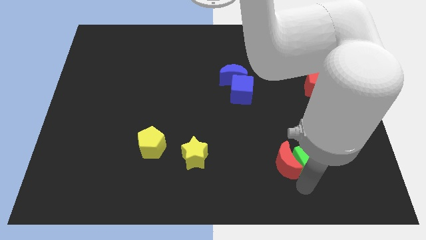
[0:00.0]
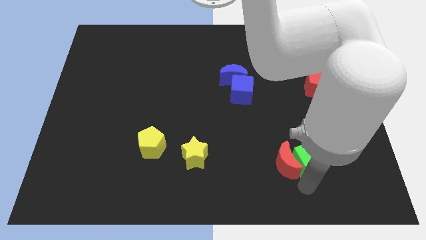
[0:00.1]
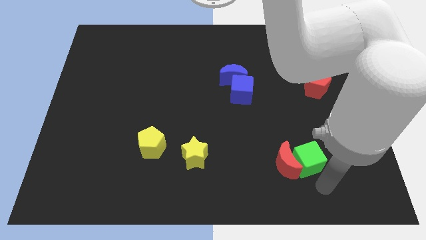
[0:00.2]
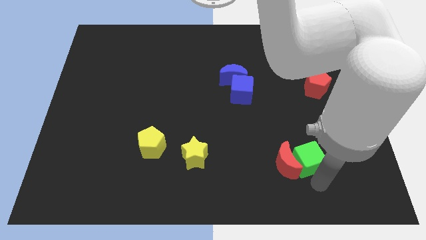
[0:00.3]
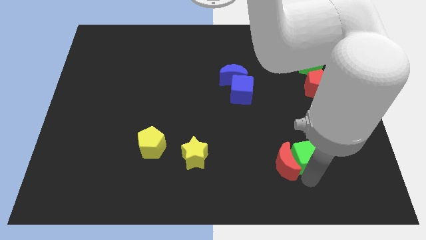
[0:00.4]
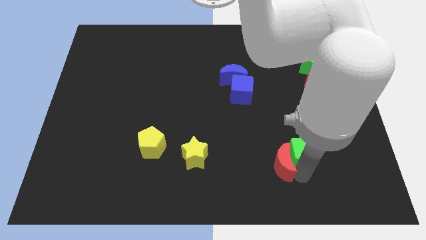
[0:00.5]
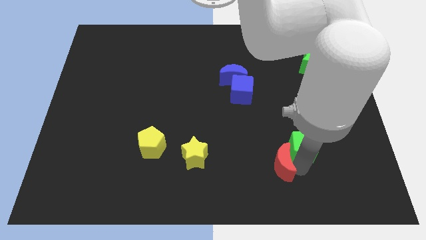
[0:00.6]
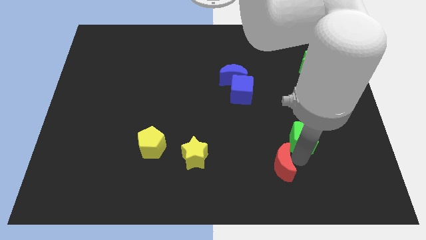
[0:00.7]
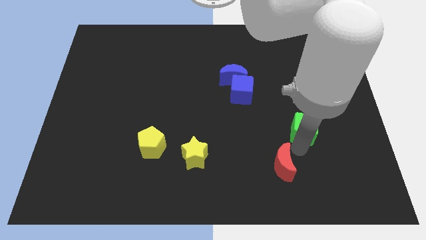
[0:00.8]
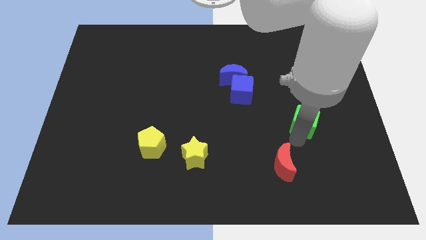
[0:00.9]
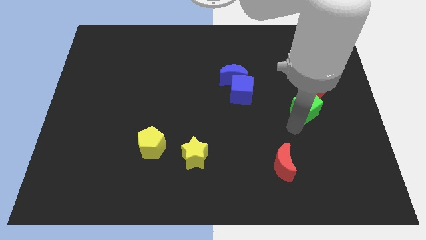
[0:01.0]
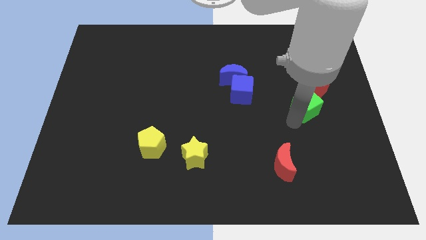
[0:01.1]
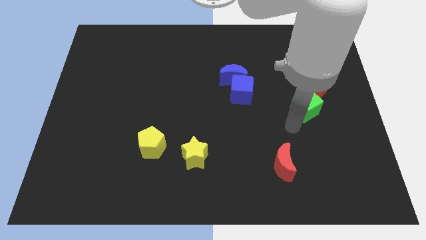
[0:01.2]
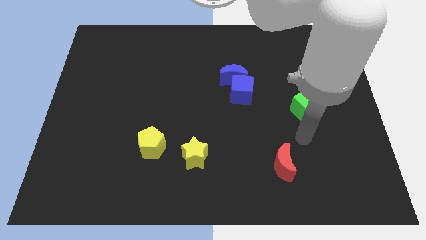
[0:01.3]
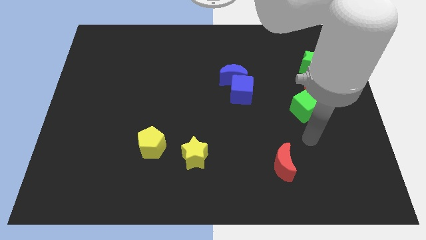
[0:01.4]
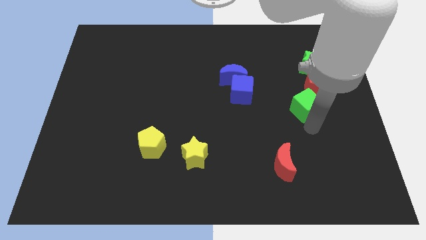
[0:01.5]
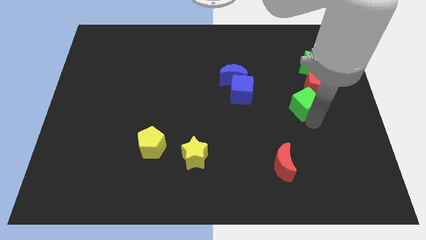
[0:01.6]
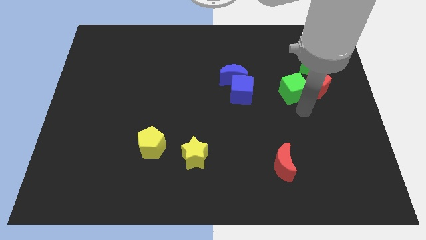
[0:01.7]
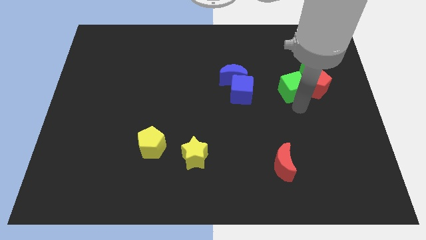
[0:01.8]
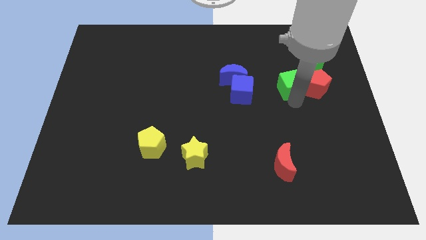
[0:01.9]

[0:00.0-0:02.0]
put the green cube left to the red pentagon

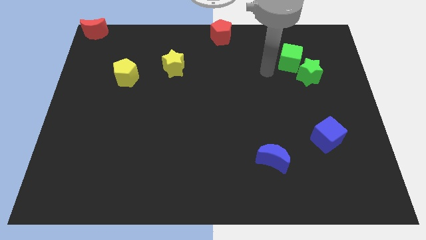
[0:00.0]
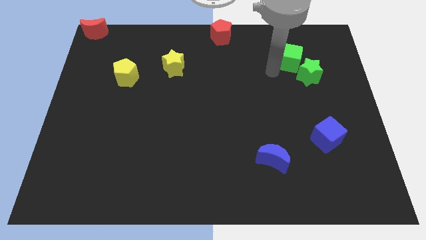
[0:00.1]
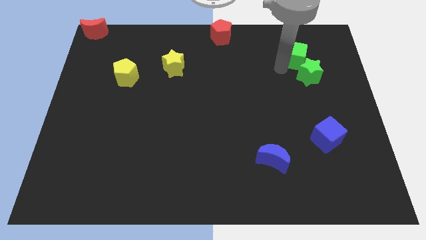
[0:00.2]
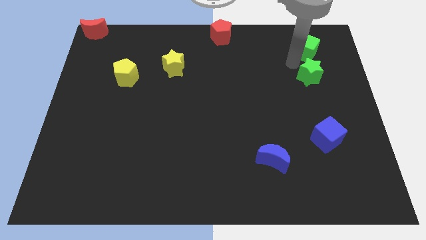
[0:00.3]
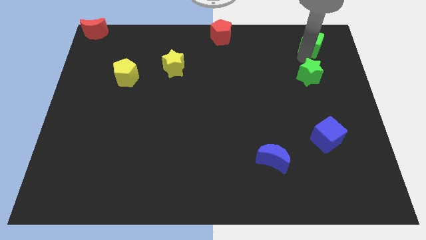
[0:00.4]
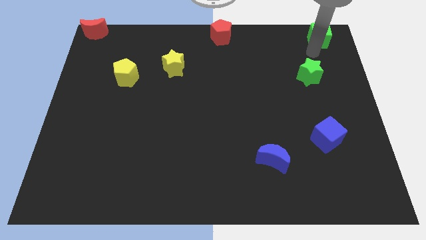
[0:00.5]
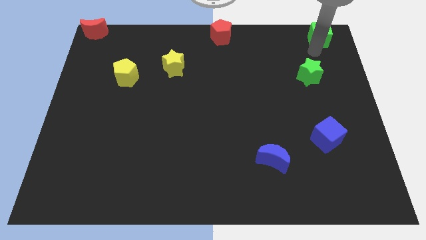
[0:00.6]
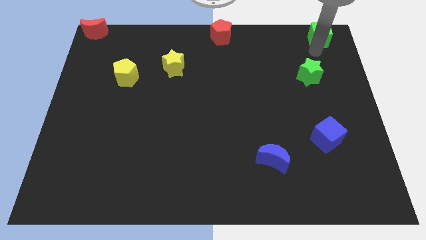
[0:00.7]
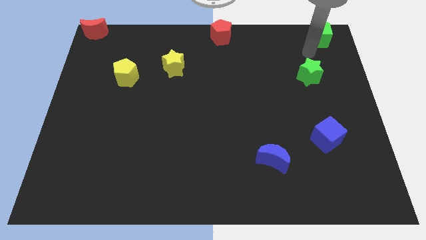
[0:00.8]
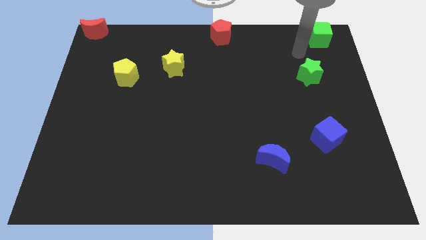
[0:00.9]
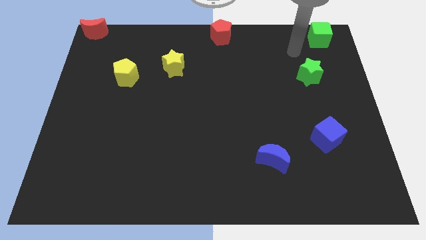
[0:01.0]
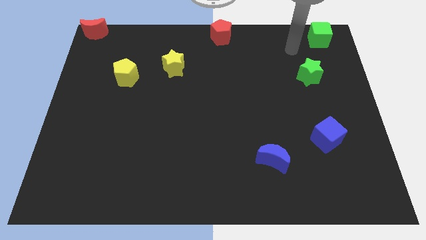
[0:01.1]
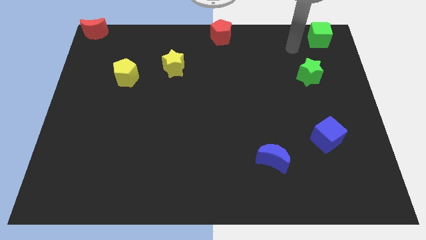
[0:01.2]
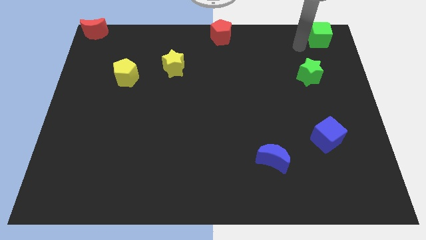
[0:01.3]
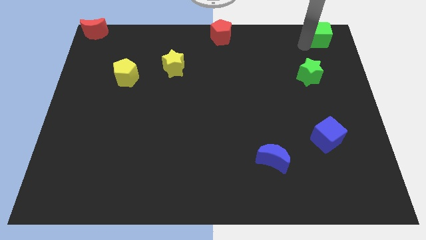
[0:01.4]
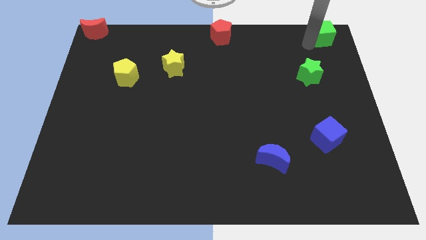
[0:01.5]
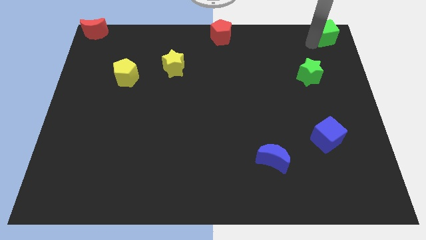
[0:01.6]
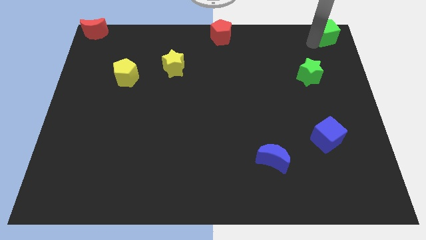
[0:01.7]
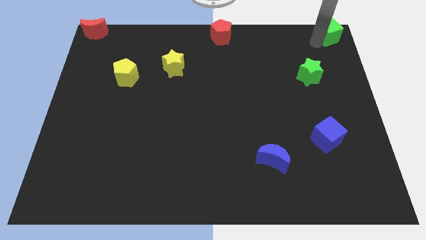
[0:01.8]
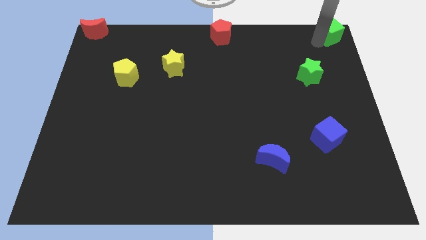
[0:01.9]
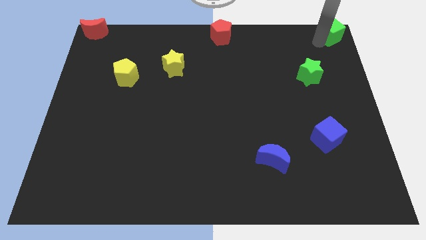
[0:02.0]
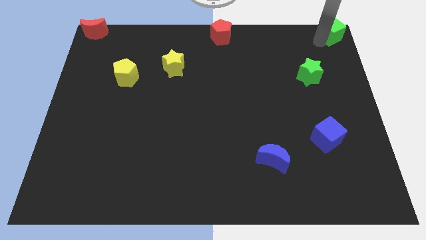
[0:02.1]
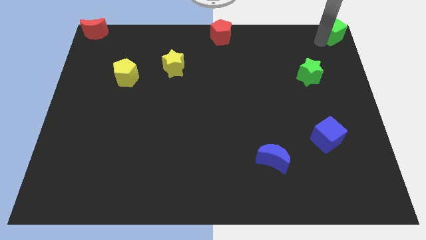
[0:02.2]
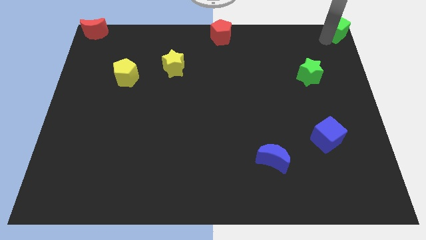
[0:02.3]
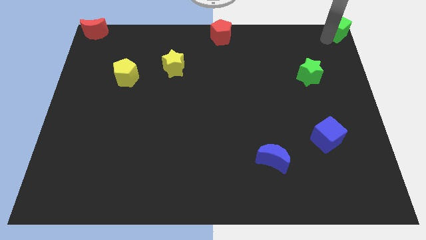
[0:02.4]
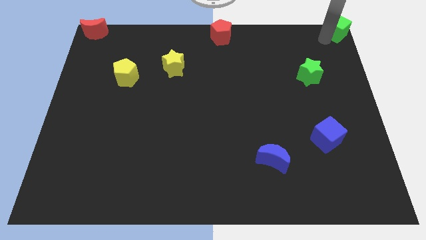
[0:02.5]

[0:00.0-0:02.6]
place the greencube to the top right corner

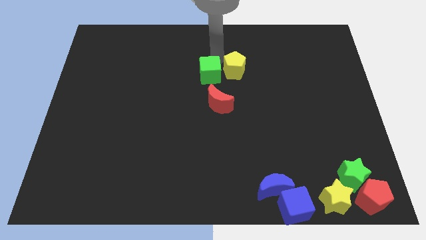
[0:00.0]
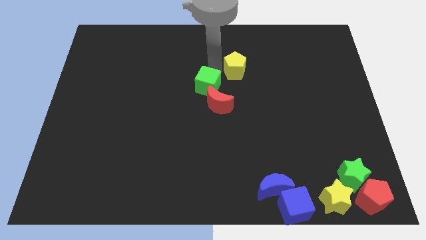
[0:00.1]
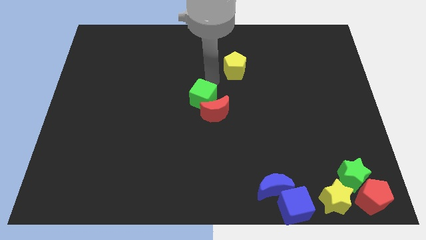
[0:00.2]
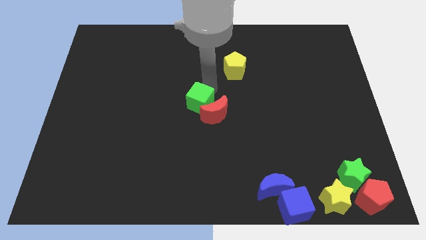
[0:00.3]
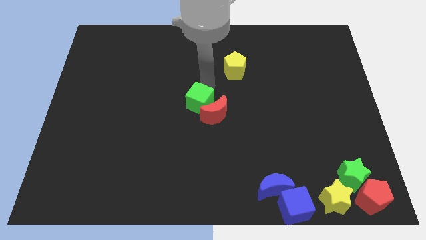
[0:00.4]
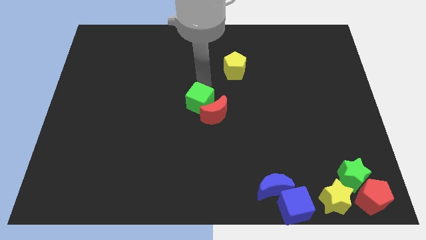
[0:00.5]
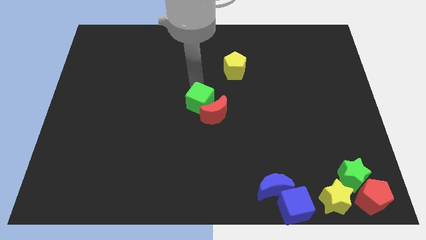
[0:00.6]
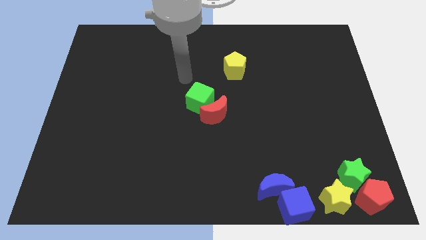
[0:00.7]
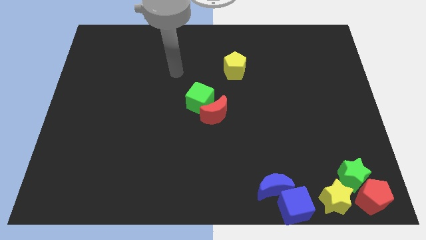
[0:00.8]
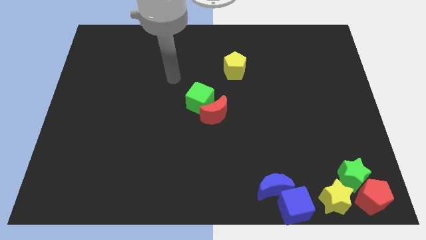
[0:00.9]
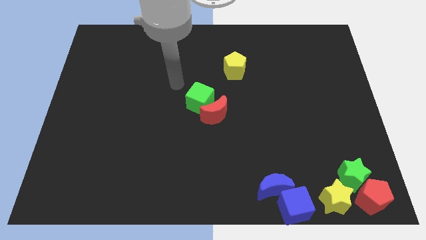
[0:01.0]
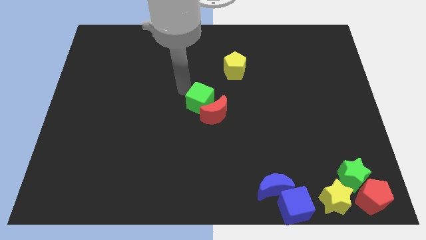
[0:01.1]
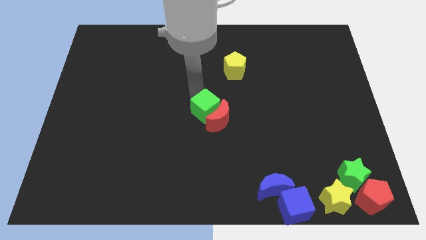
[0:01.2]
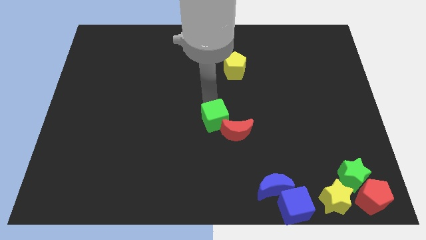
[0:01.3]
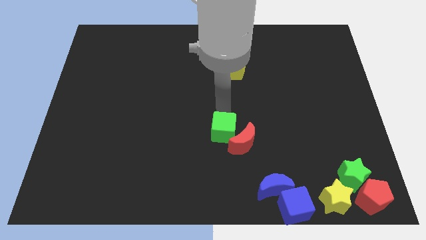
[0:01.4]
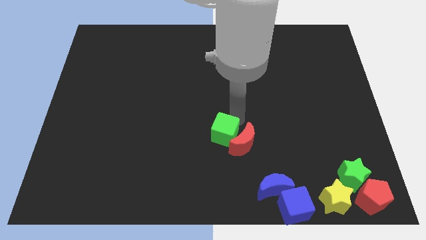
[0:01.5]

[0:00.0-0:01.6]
push the green cube into the red crescent

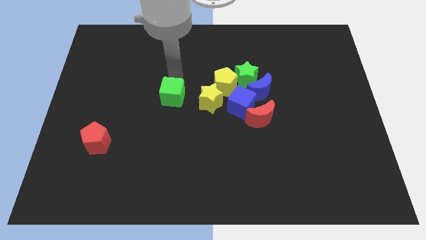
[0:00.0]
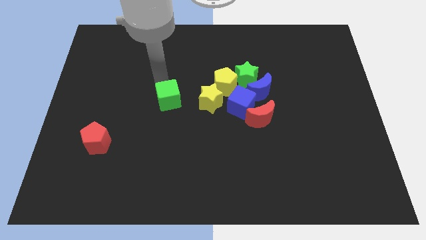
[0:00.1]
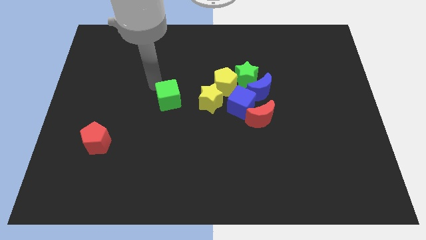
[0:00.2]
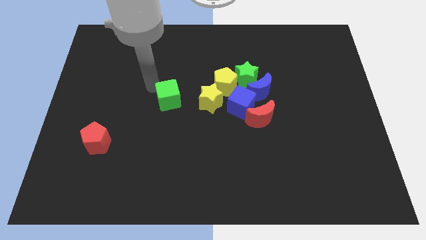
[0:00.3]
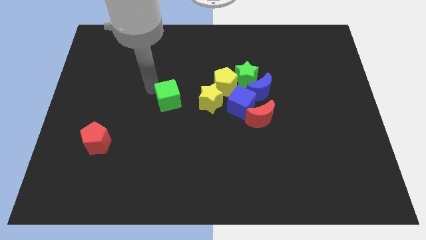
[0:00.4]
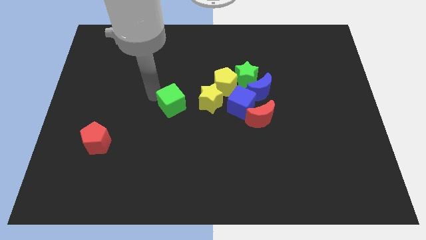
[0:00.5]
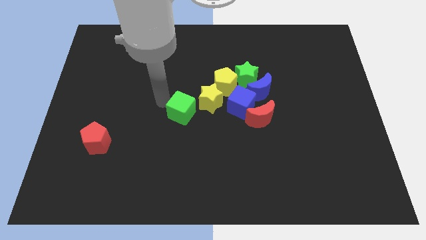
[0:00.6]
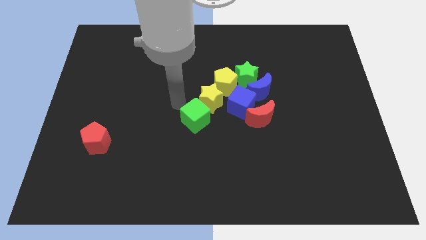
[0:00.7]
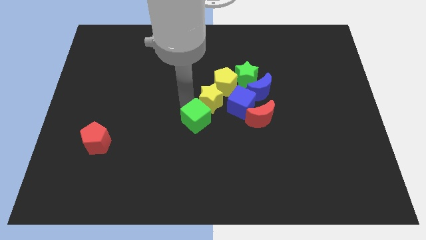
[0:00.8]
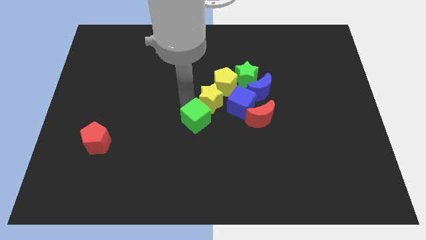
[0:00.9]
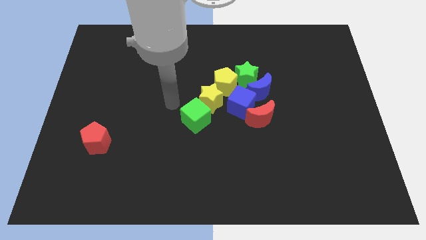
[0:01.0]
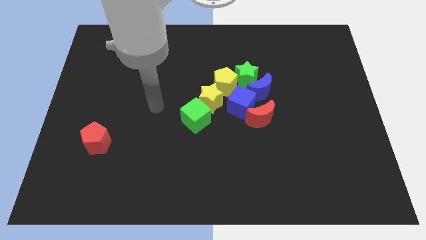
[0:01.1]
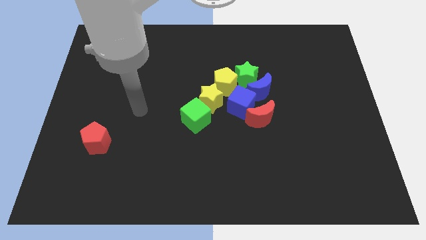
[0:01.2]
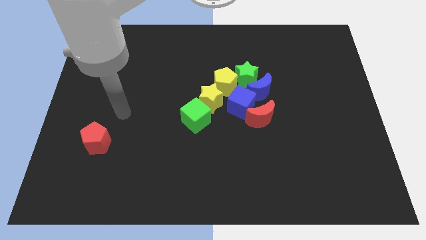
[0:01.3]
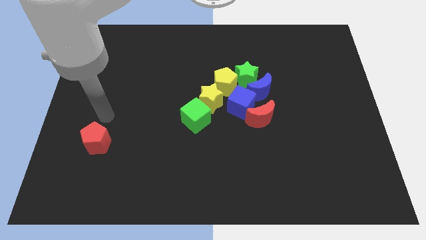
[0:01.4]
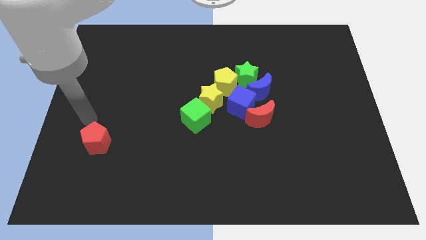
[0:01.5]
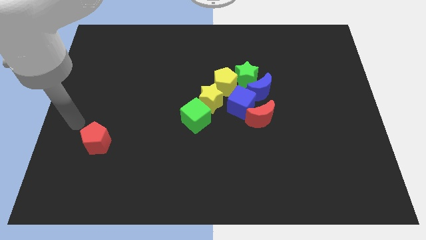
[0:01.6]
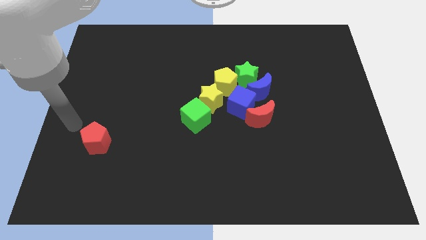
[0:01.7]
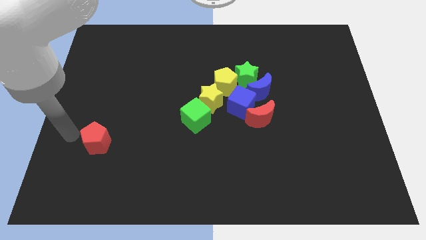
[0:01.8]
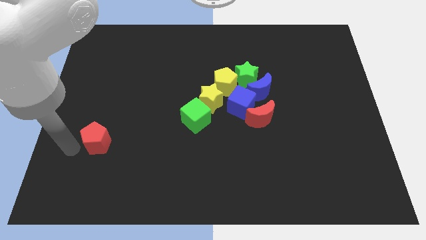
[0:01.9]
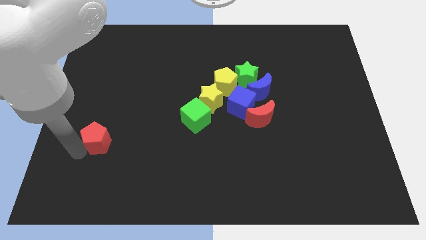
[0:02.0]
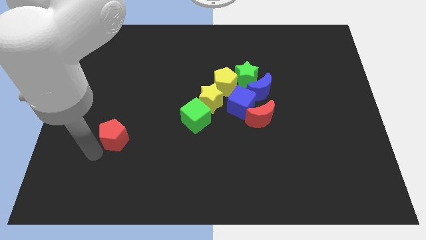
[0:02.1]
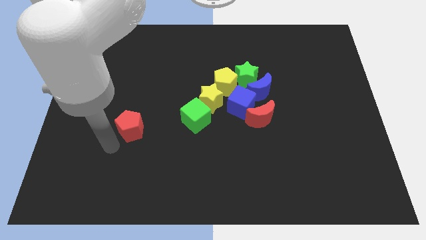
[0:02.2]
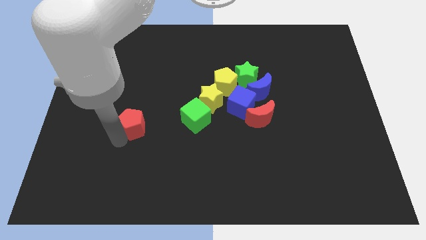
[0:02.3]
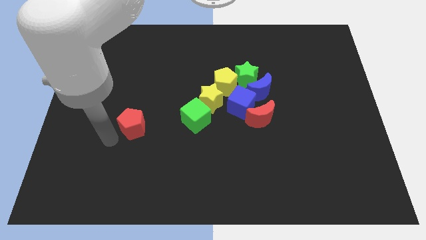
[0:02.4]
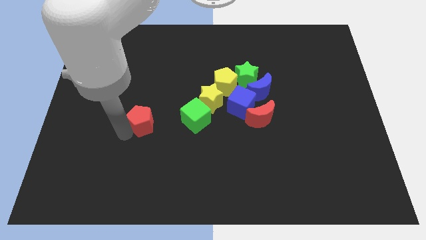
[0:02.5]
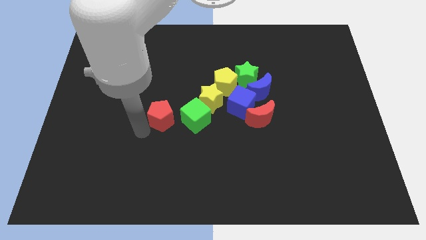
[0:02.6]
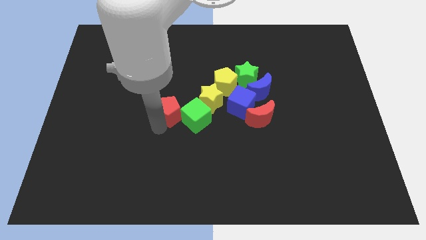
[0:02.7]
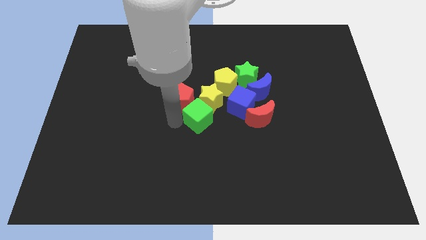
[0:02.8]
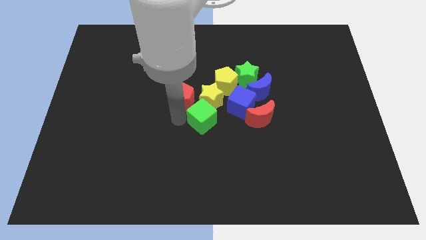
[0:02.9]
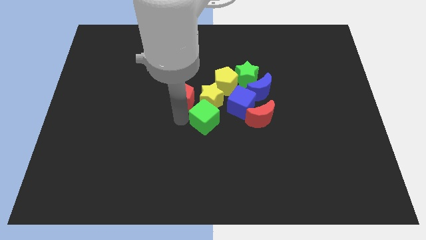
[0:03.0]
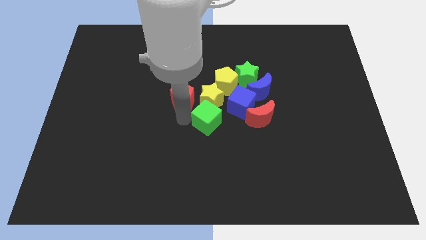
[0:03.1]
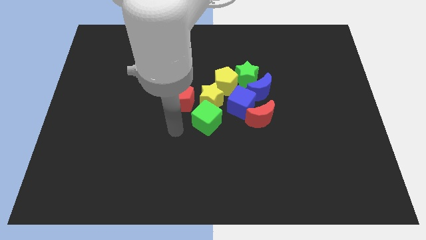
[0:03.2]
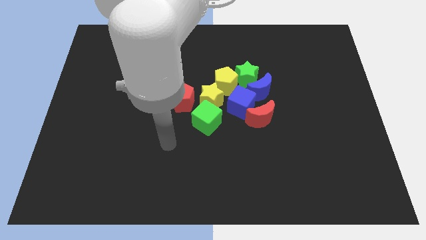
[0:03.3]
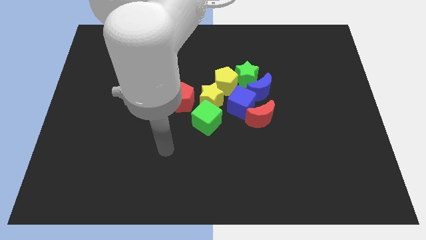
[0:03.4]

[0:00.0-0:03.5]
place the red pentagon near to the yellow star
